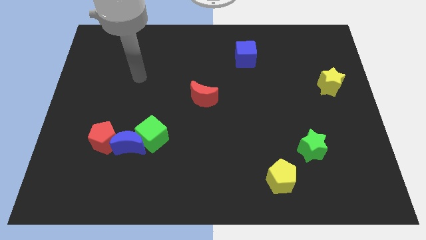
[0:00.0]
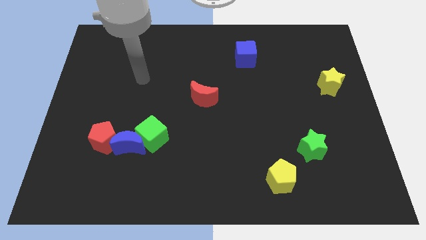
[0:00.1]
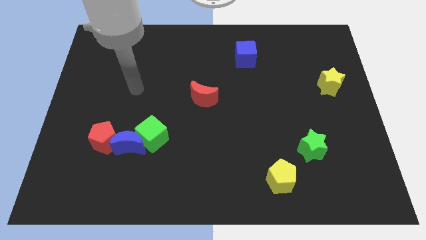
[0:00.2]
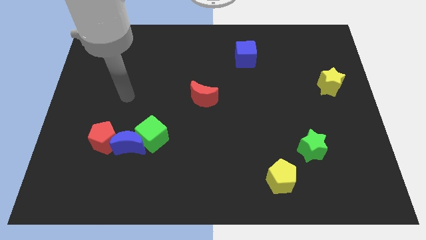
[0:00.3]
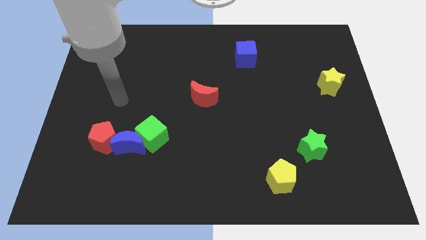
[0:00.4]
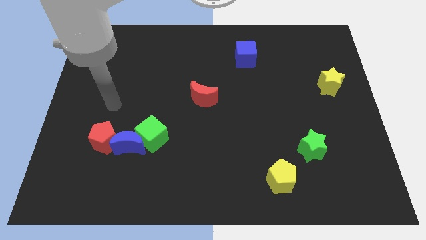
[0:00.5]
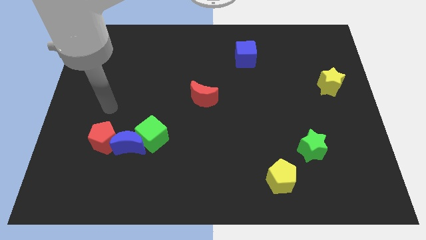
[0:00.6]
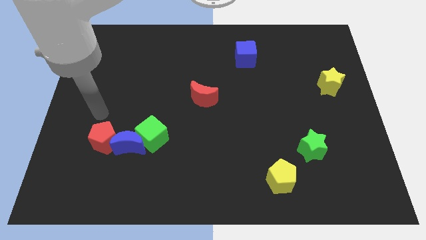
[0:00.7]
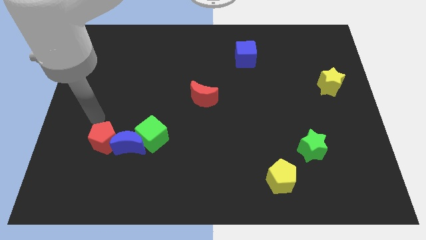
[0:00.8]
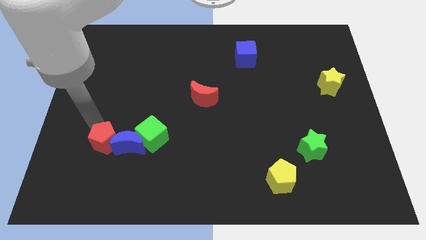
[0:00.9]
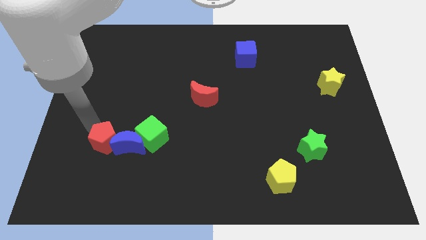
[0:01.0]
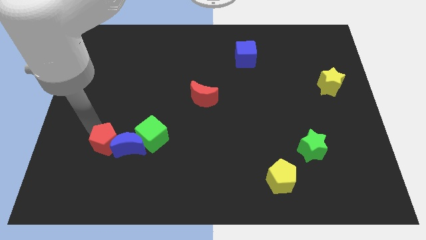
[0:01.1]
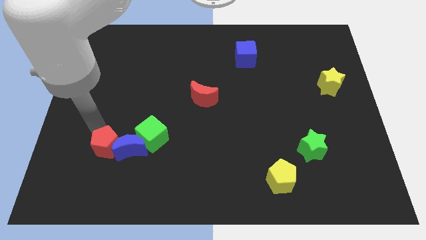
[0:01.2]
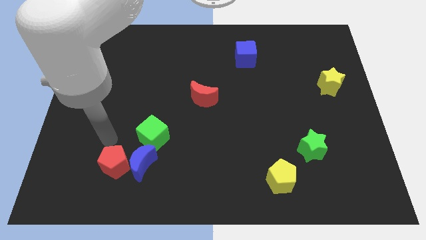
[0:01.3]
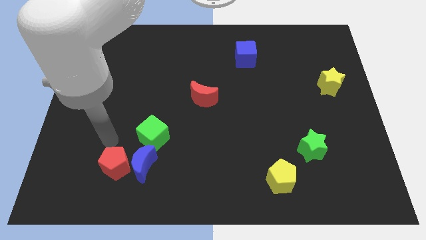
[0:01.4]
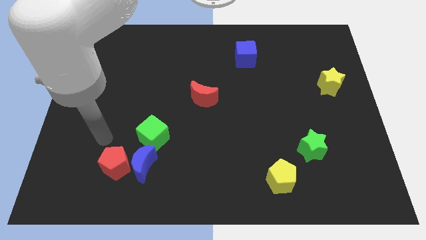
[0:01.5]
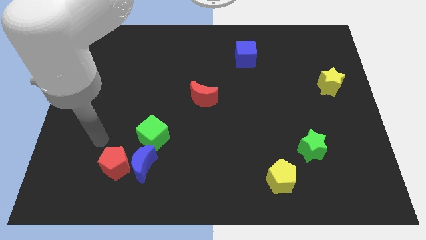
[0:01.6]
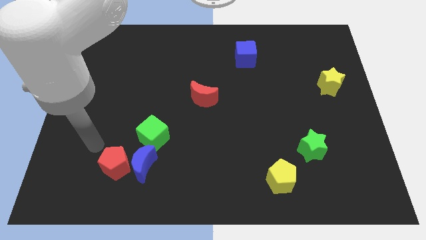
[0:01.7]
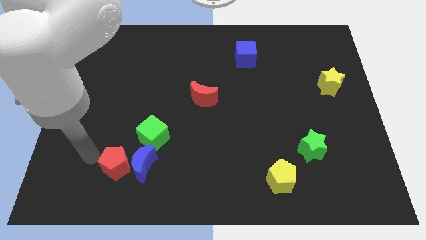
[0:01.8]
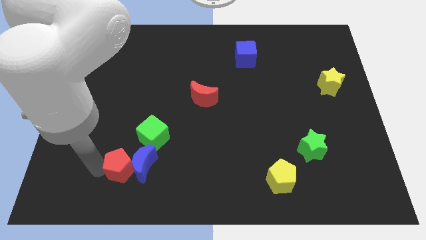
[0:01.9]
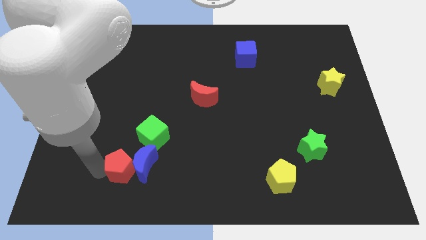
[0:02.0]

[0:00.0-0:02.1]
push the red pentagon to the bottom left

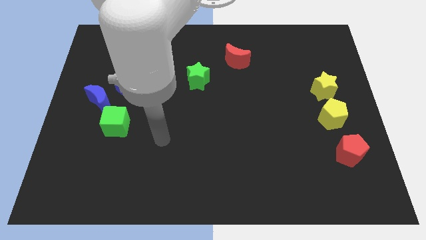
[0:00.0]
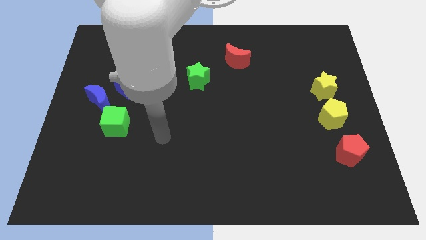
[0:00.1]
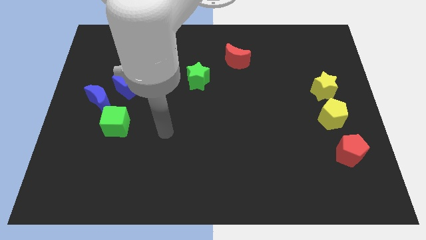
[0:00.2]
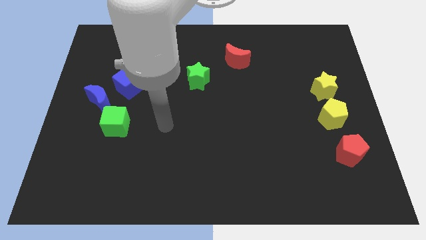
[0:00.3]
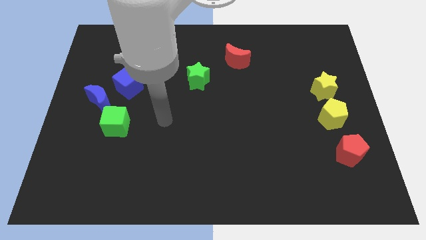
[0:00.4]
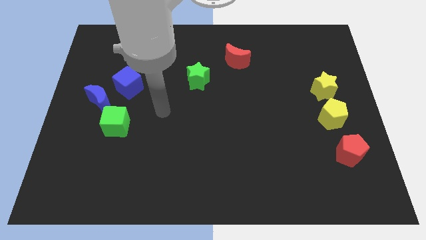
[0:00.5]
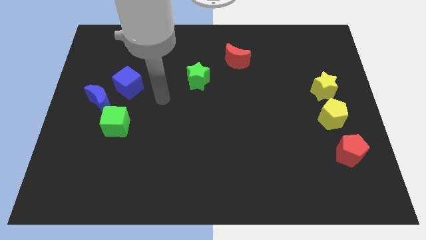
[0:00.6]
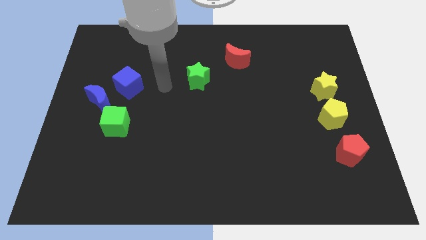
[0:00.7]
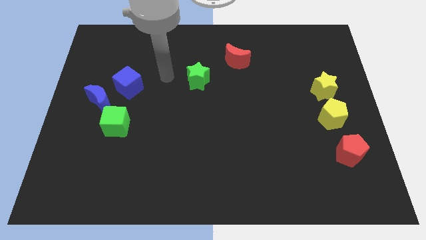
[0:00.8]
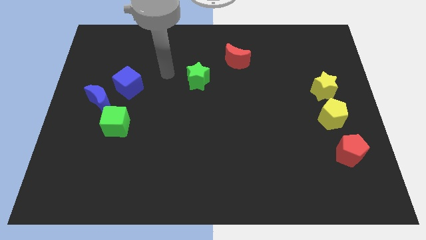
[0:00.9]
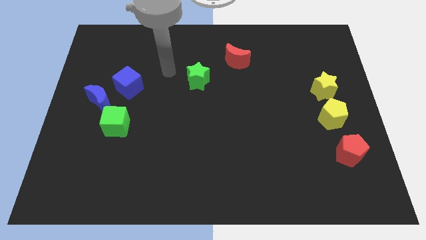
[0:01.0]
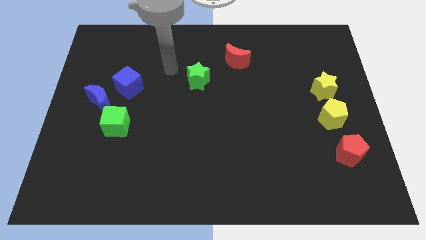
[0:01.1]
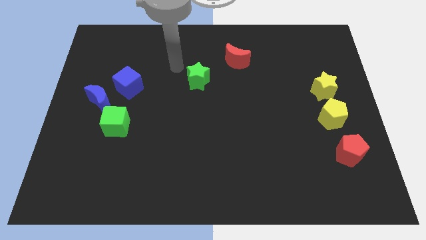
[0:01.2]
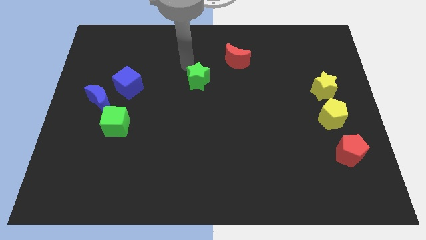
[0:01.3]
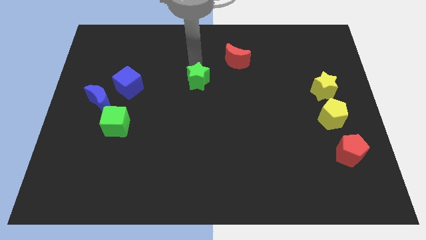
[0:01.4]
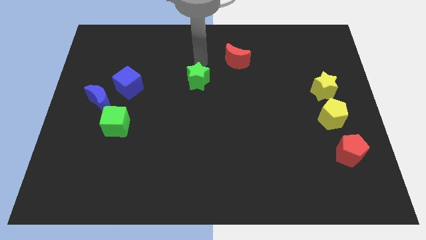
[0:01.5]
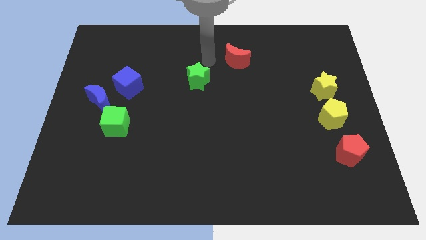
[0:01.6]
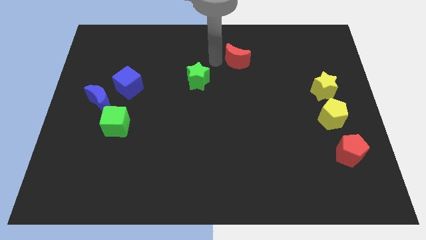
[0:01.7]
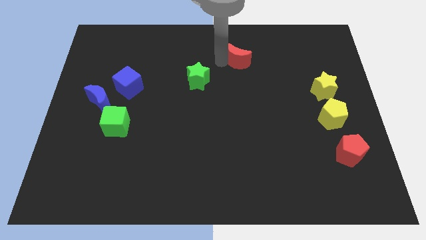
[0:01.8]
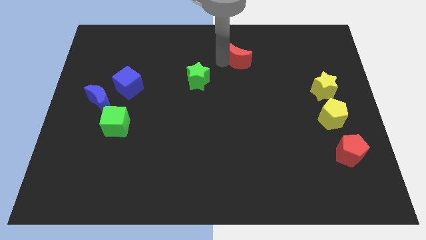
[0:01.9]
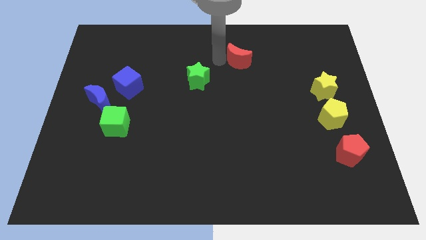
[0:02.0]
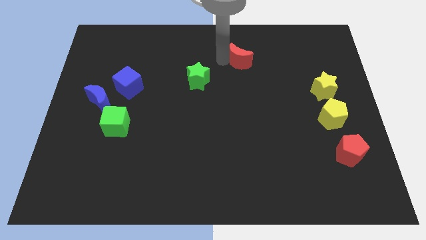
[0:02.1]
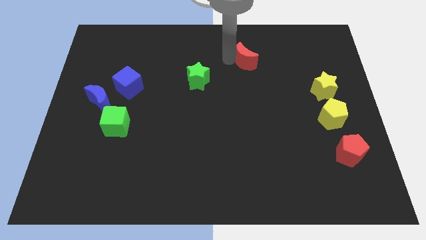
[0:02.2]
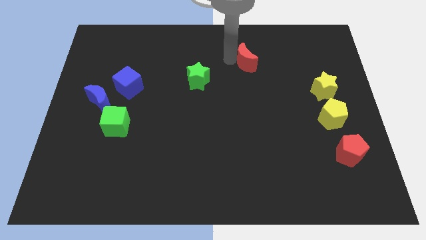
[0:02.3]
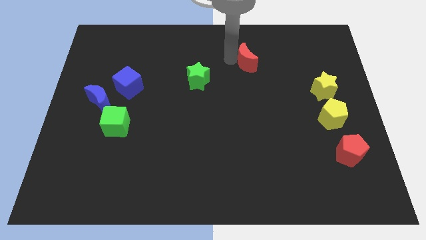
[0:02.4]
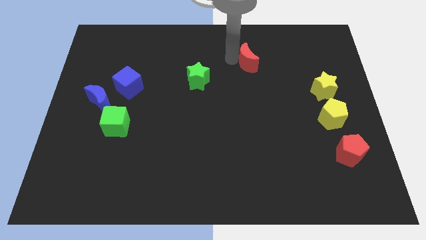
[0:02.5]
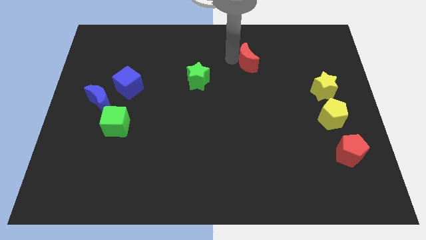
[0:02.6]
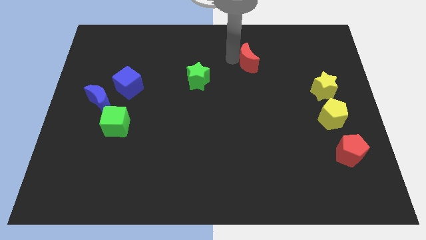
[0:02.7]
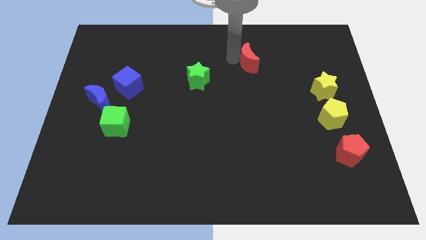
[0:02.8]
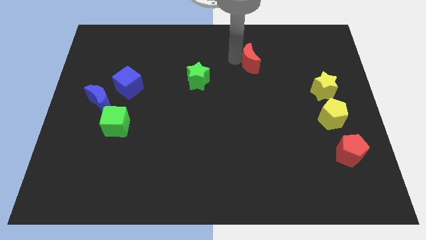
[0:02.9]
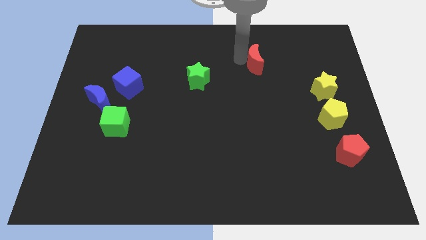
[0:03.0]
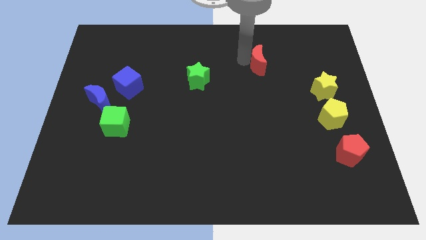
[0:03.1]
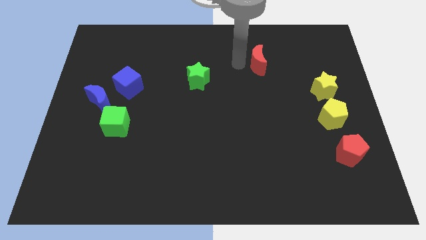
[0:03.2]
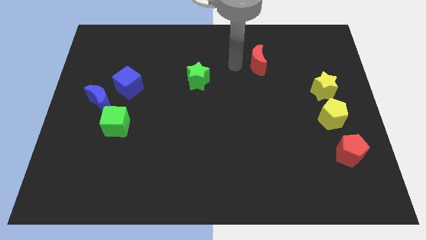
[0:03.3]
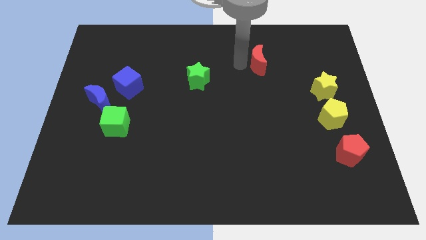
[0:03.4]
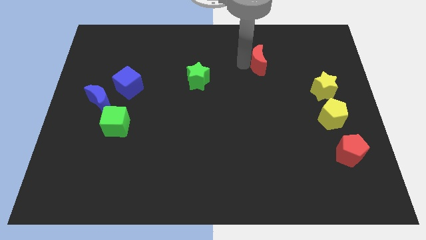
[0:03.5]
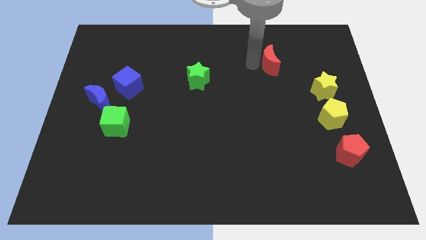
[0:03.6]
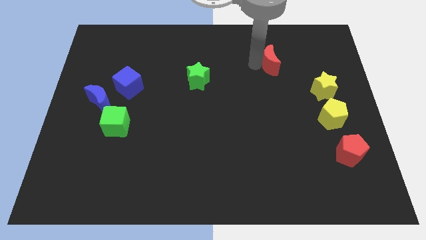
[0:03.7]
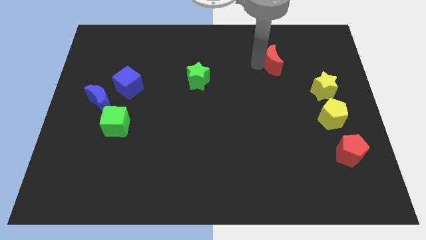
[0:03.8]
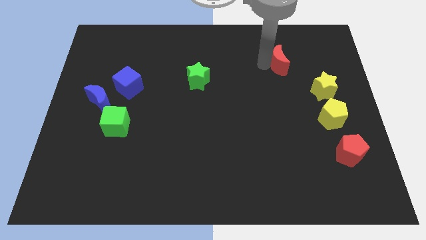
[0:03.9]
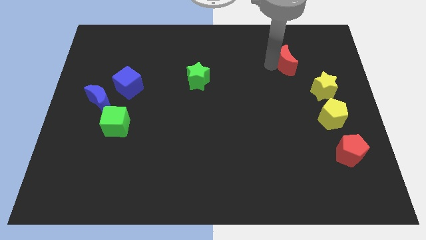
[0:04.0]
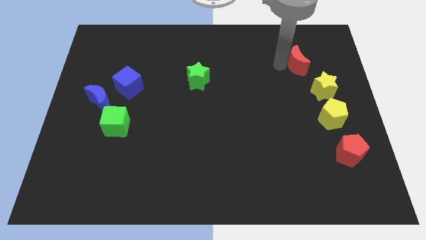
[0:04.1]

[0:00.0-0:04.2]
push the red crescent to the right of the board

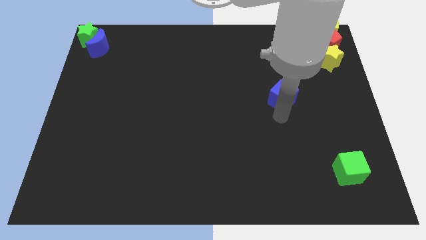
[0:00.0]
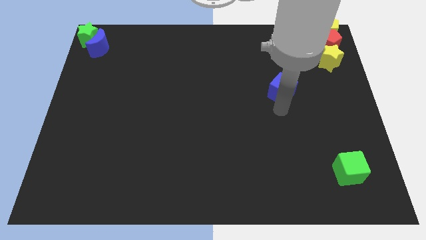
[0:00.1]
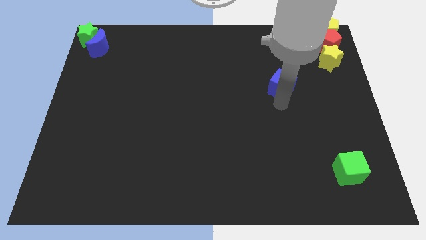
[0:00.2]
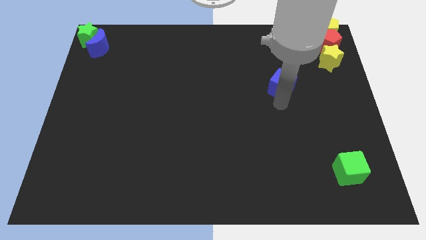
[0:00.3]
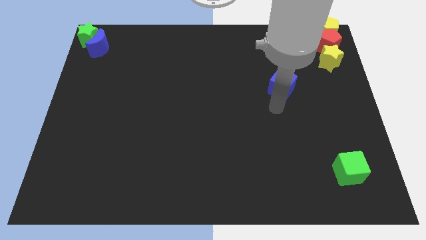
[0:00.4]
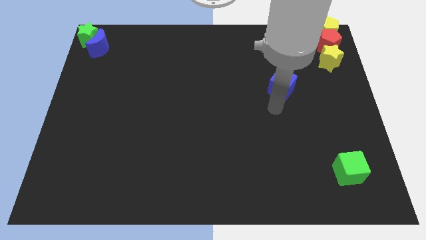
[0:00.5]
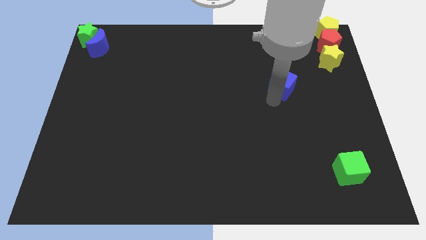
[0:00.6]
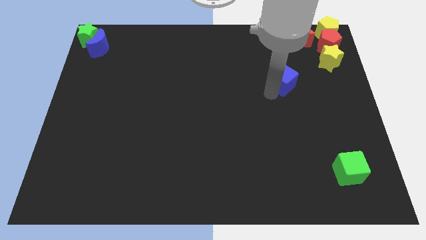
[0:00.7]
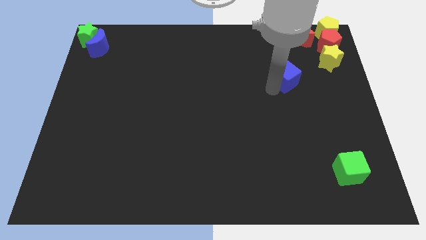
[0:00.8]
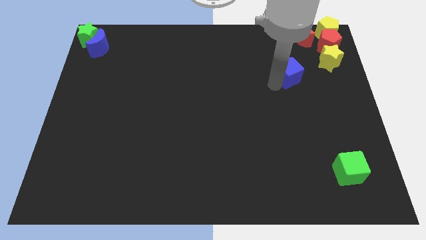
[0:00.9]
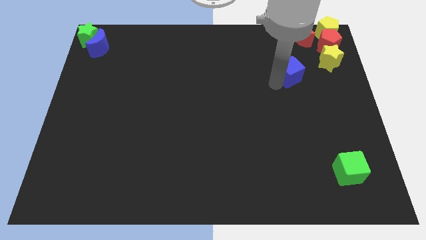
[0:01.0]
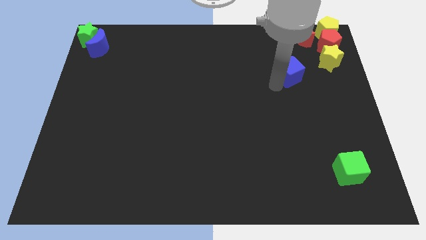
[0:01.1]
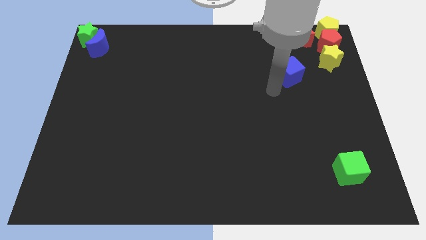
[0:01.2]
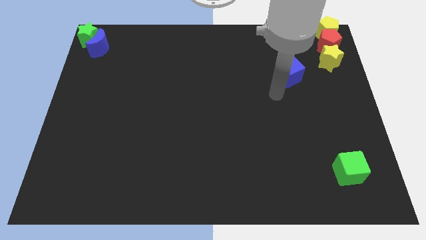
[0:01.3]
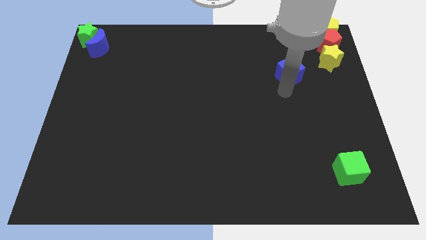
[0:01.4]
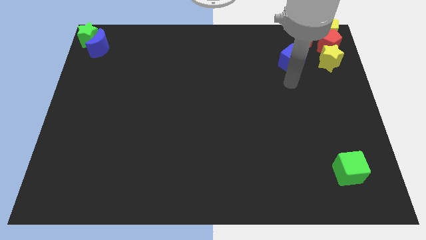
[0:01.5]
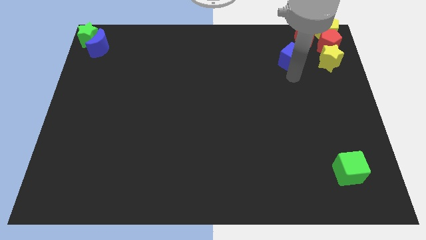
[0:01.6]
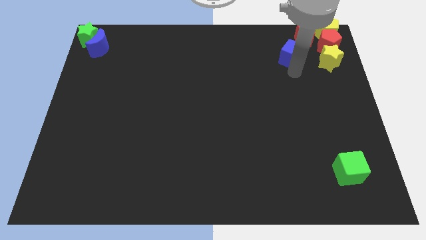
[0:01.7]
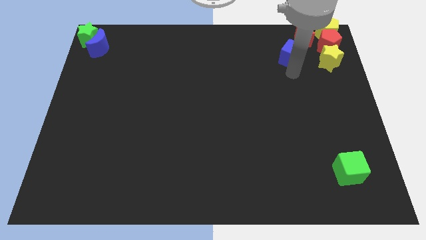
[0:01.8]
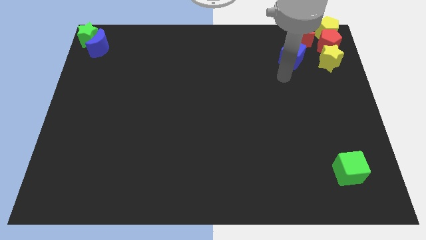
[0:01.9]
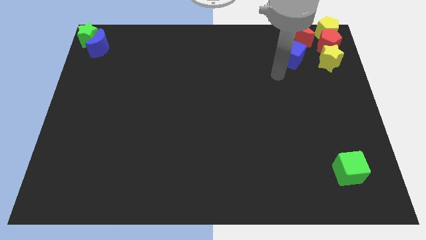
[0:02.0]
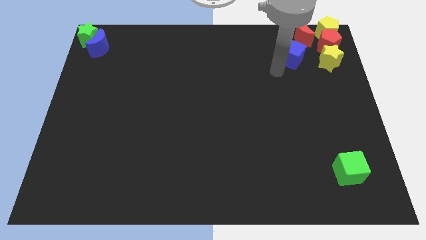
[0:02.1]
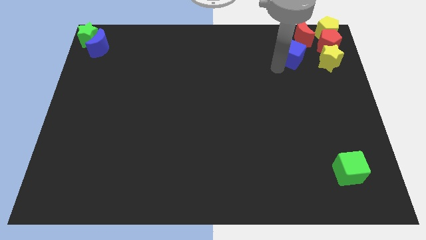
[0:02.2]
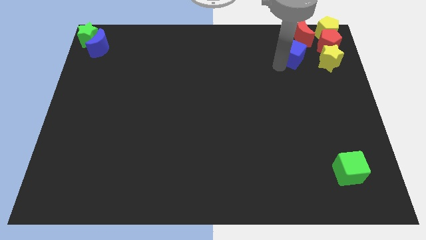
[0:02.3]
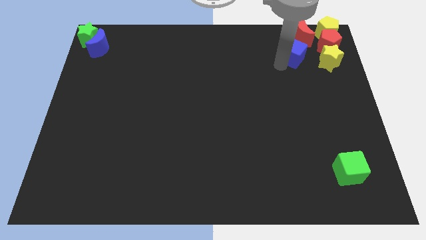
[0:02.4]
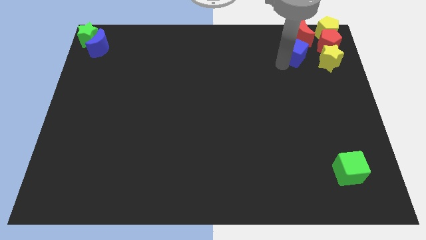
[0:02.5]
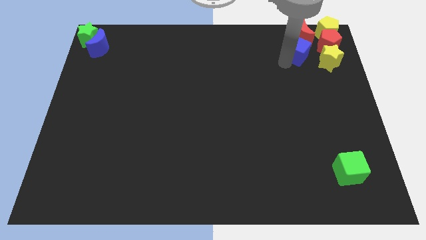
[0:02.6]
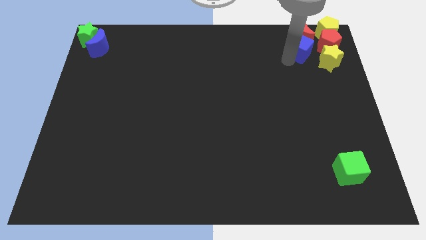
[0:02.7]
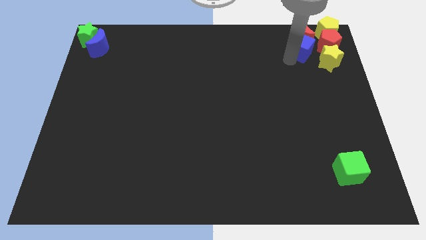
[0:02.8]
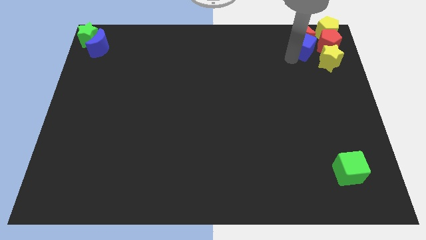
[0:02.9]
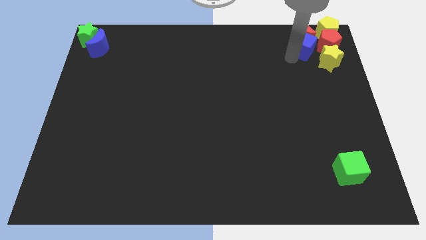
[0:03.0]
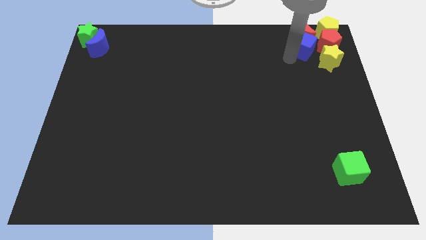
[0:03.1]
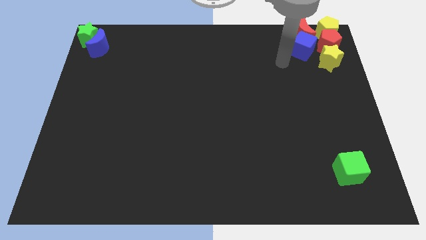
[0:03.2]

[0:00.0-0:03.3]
move the blue cube to the bottom of the red crescent
